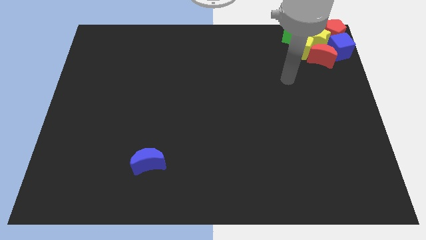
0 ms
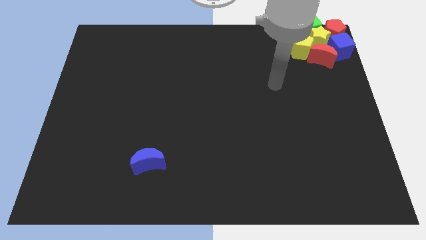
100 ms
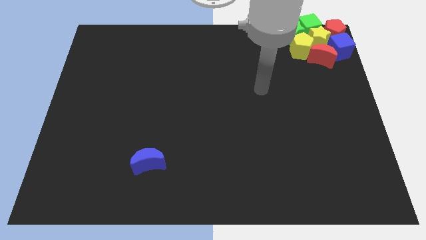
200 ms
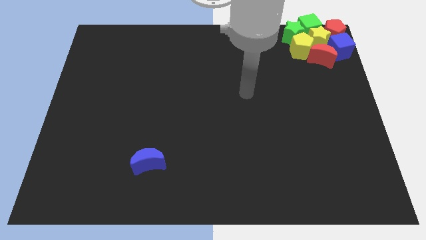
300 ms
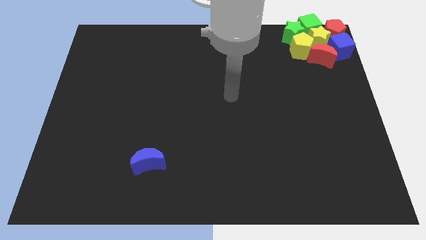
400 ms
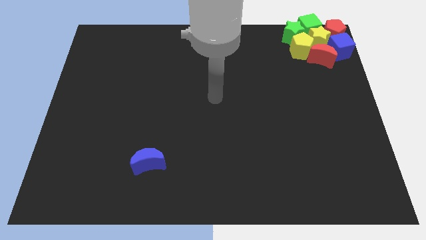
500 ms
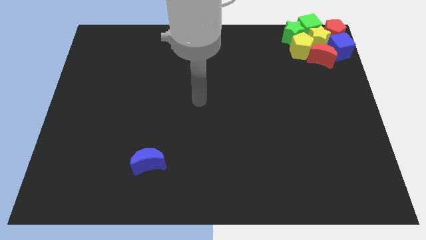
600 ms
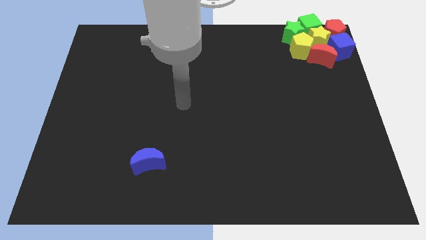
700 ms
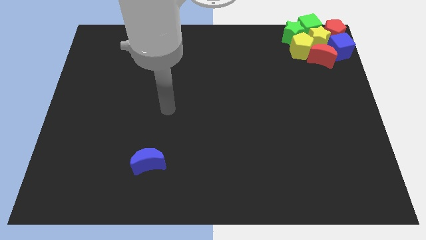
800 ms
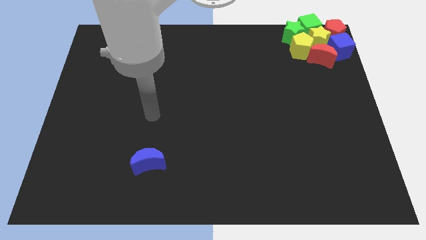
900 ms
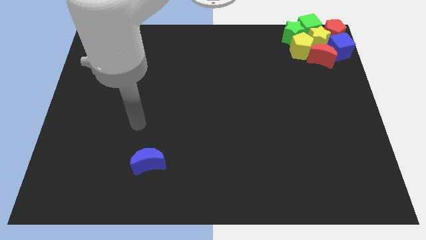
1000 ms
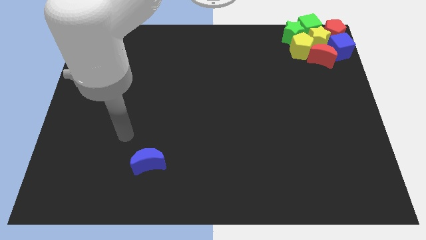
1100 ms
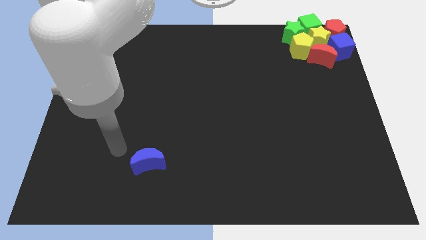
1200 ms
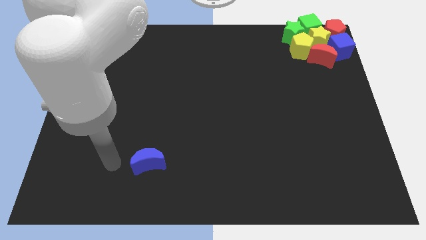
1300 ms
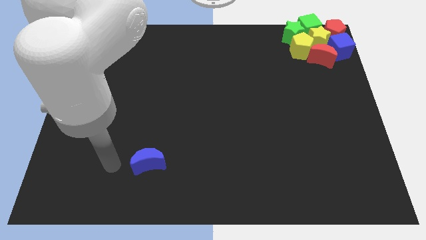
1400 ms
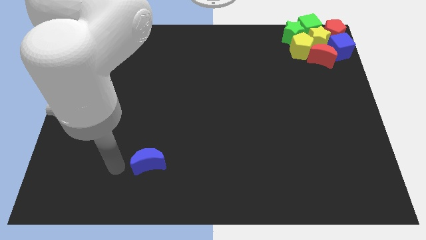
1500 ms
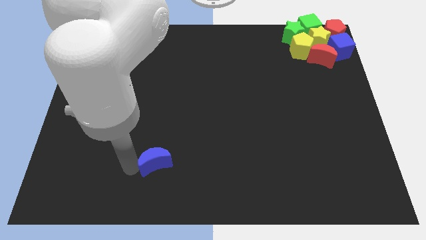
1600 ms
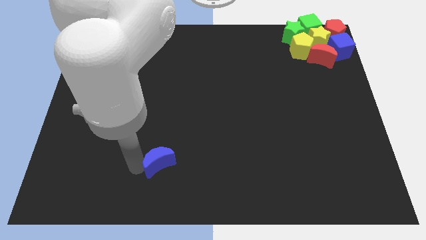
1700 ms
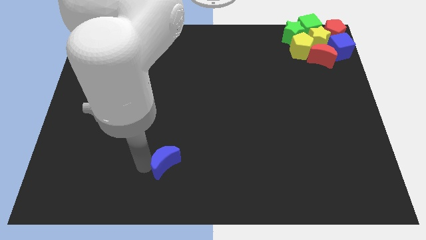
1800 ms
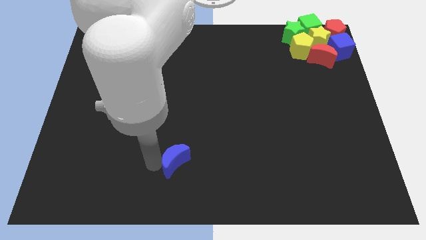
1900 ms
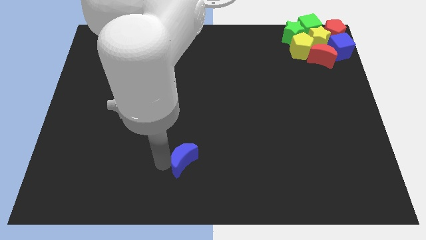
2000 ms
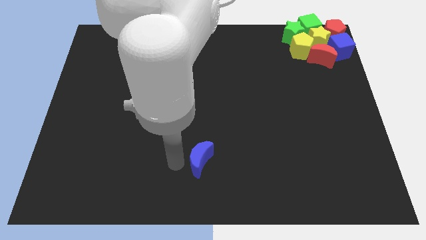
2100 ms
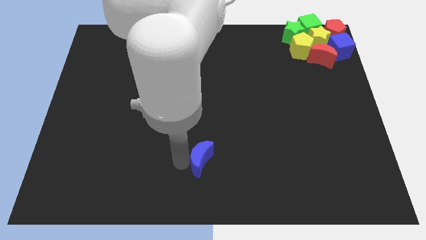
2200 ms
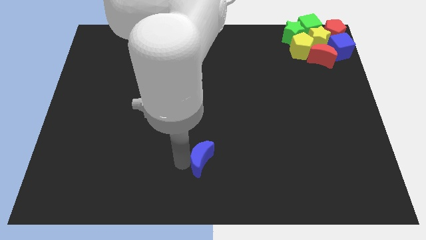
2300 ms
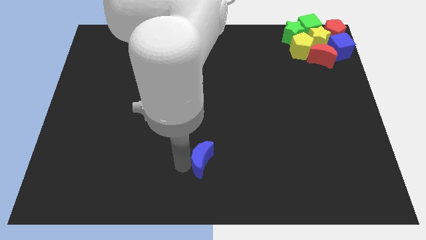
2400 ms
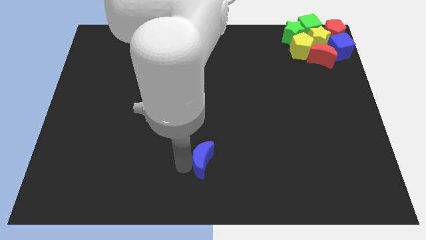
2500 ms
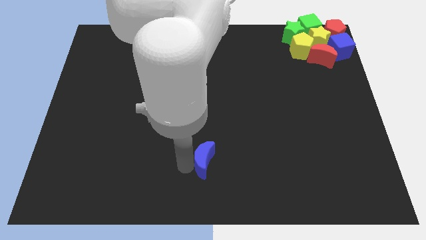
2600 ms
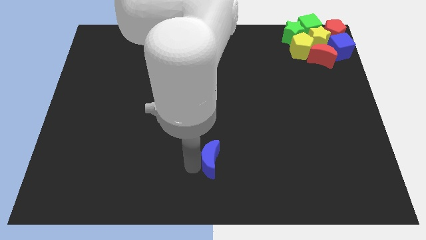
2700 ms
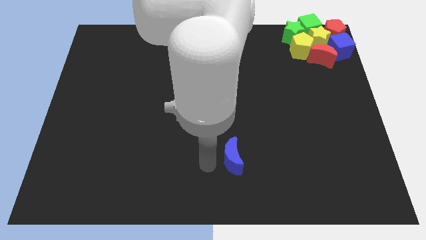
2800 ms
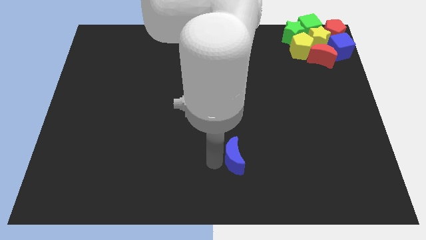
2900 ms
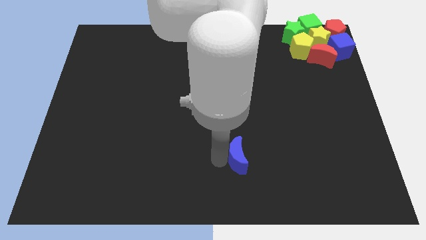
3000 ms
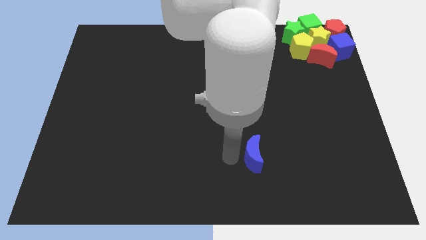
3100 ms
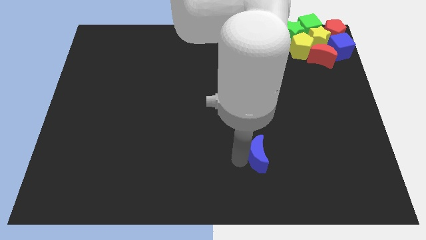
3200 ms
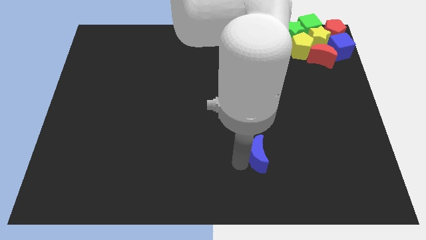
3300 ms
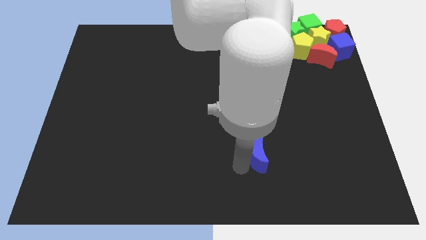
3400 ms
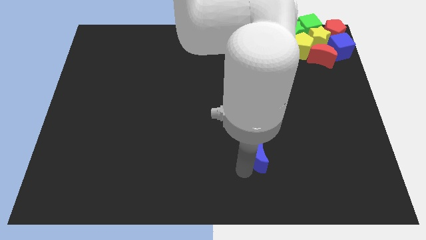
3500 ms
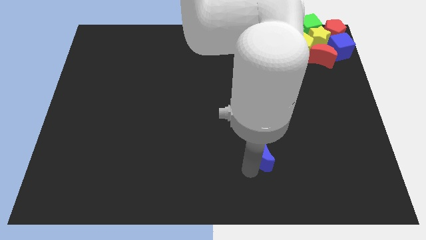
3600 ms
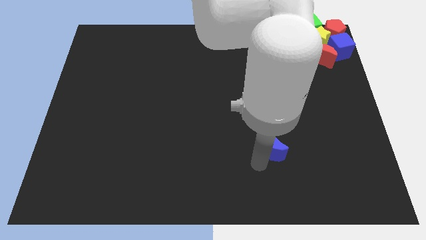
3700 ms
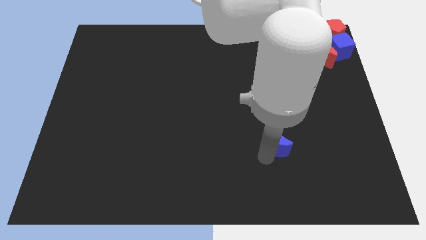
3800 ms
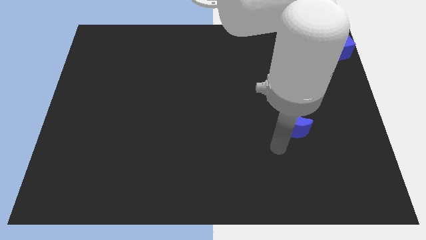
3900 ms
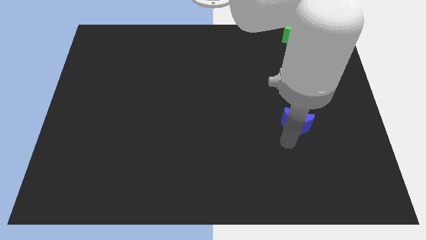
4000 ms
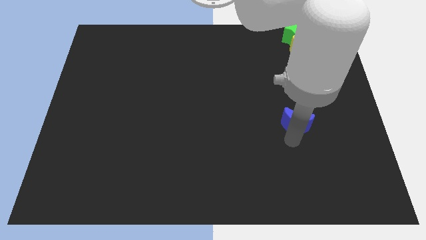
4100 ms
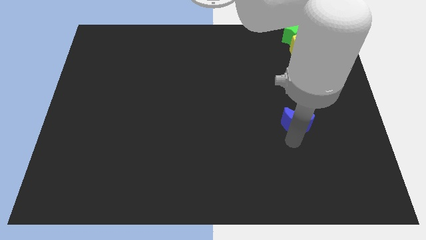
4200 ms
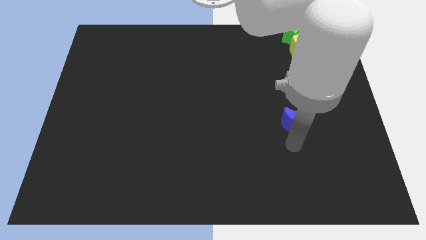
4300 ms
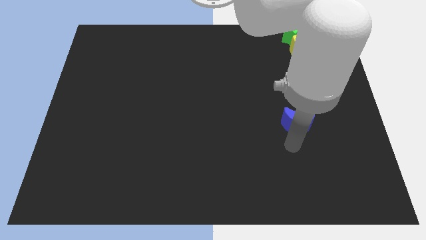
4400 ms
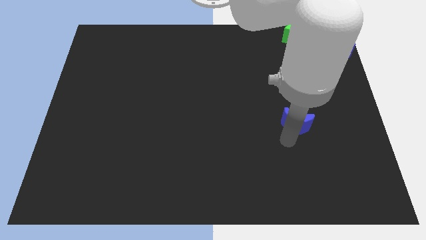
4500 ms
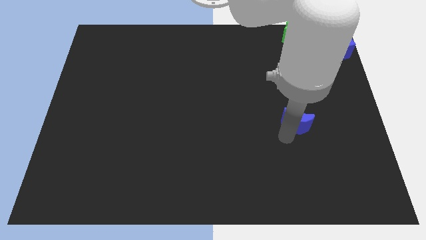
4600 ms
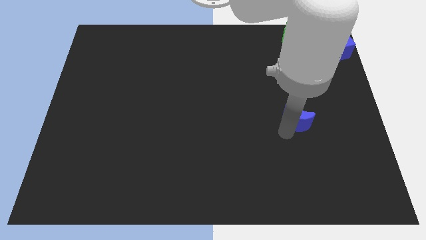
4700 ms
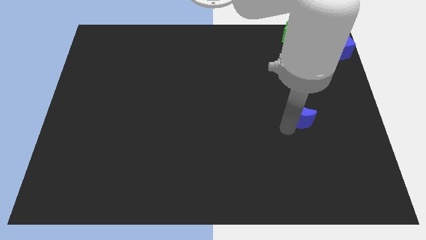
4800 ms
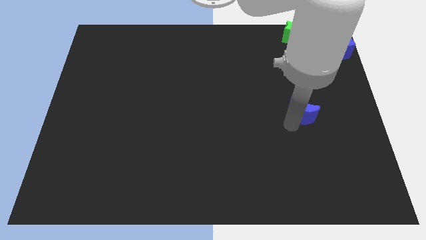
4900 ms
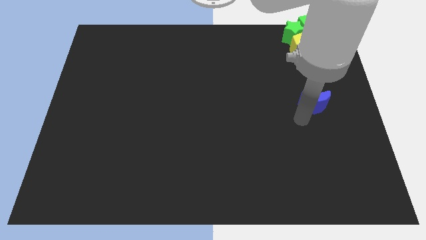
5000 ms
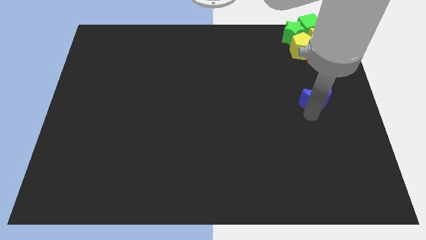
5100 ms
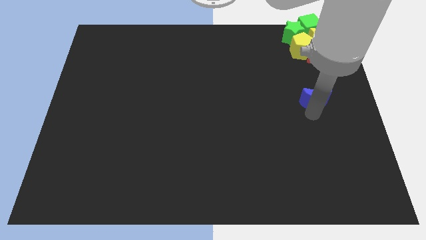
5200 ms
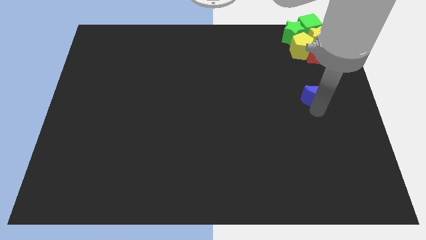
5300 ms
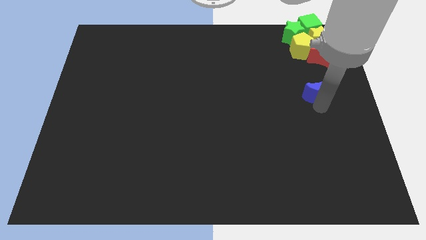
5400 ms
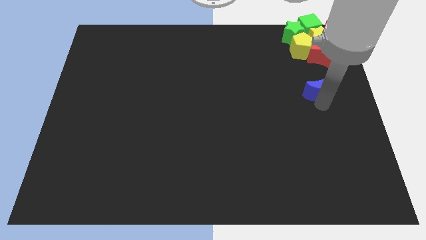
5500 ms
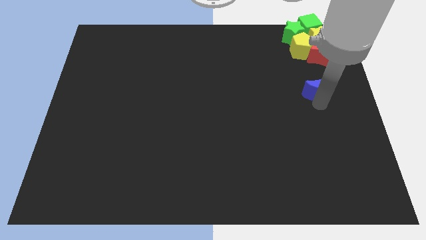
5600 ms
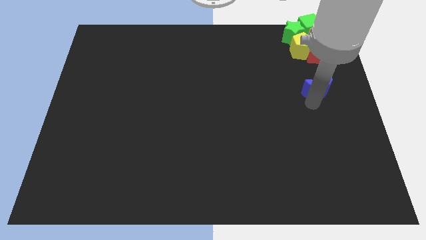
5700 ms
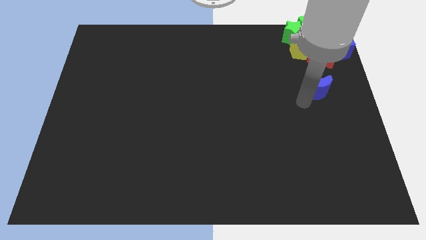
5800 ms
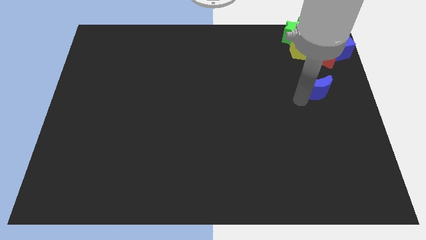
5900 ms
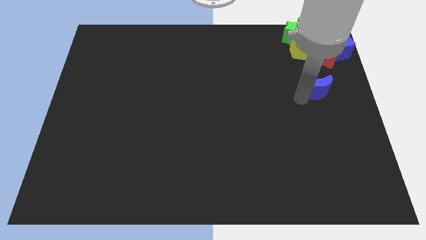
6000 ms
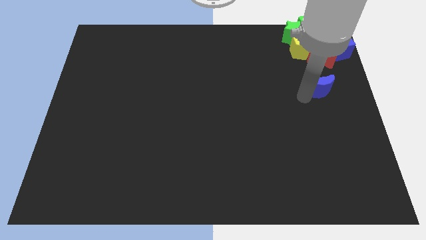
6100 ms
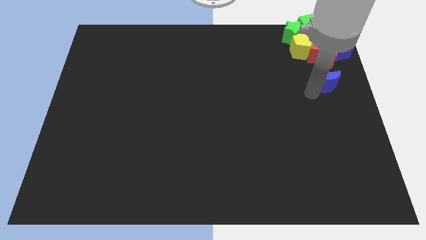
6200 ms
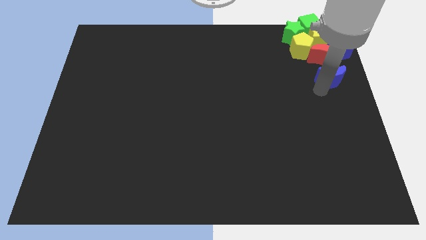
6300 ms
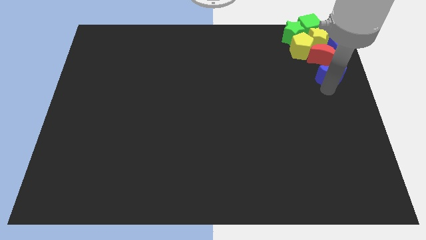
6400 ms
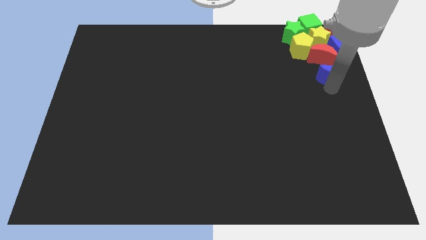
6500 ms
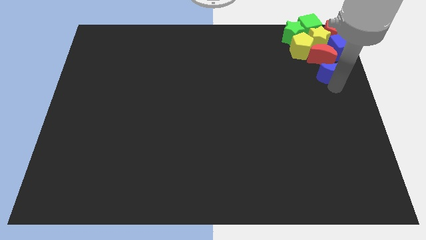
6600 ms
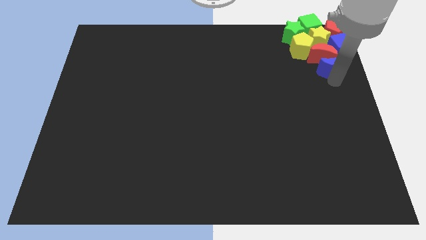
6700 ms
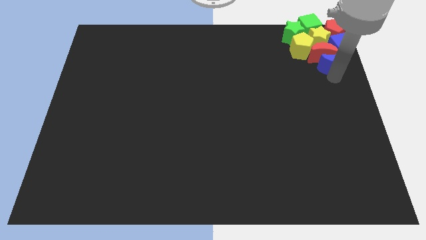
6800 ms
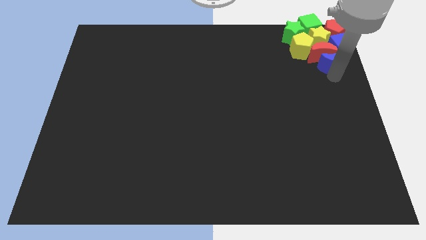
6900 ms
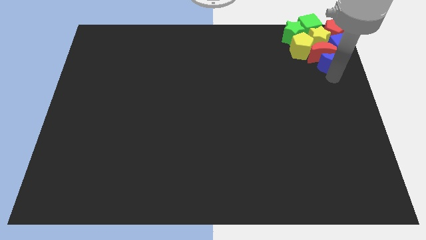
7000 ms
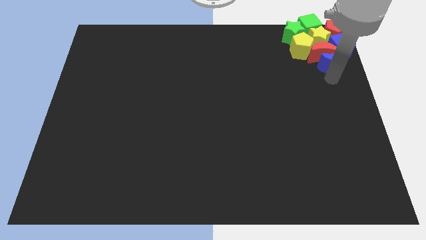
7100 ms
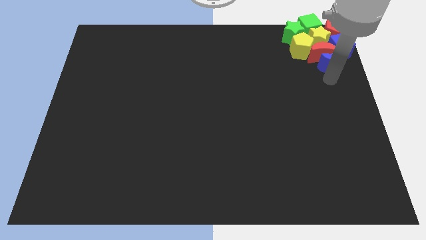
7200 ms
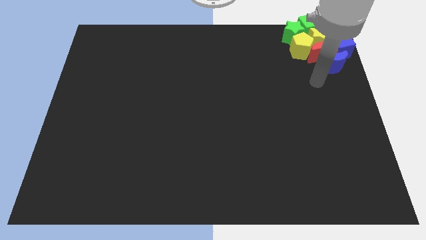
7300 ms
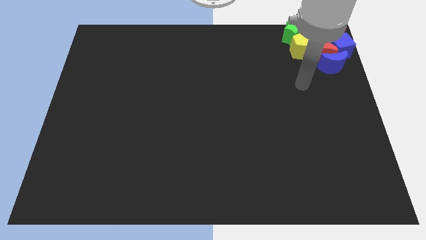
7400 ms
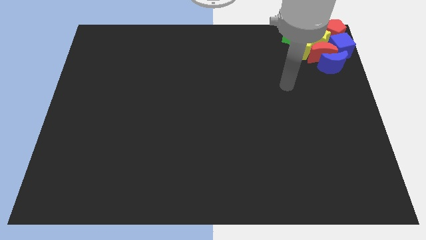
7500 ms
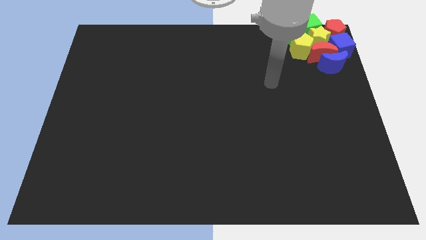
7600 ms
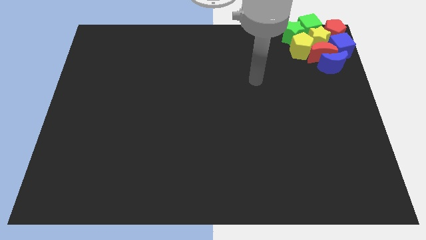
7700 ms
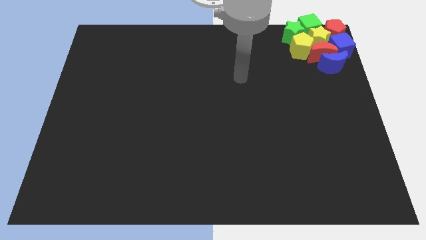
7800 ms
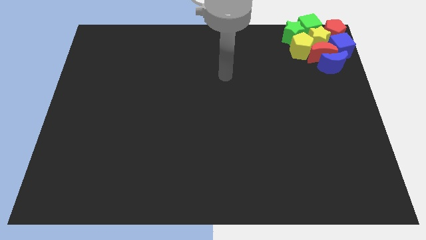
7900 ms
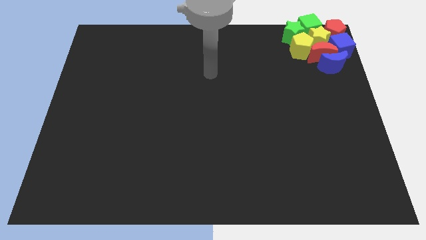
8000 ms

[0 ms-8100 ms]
move the blue moon into the red moon

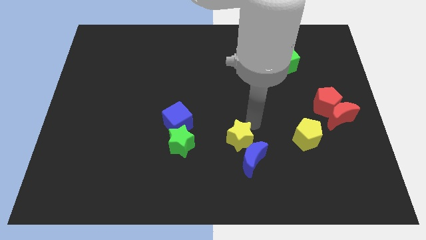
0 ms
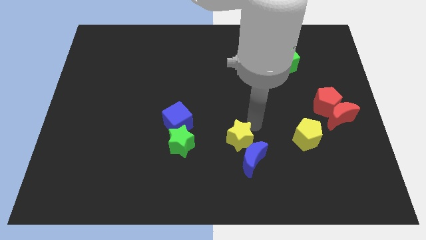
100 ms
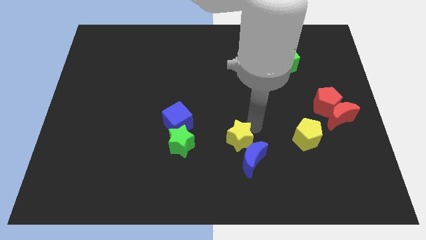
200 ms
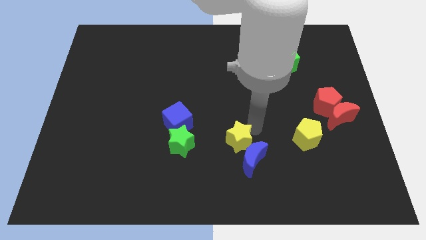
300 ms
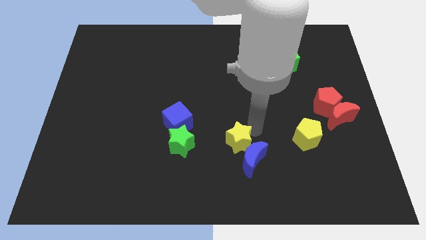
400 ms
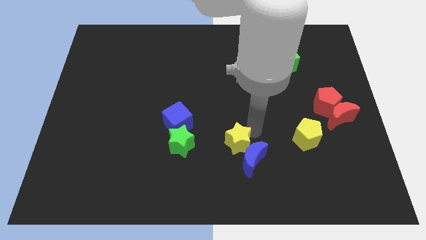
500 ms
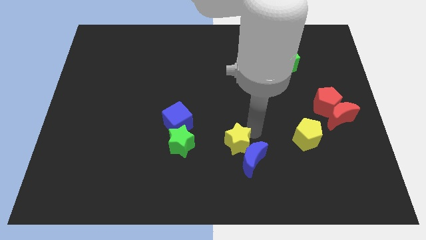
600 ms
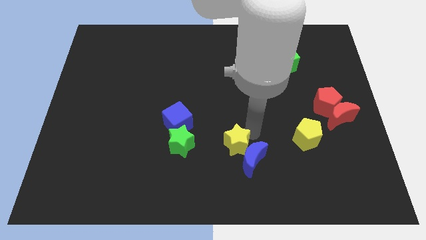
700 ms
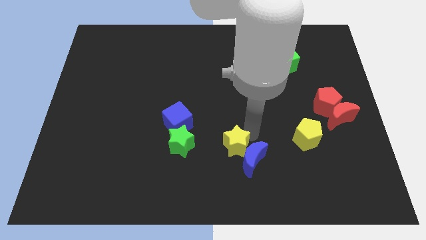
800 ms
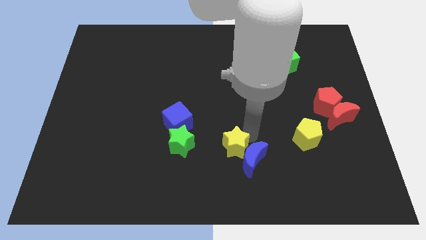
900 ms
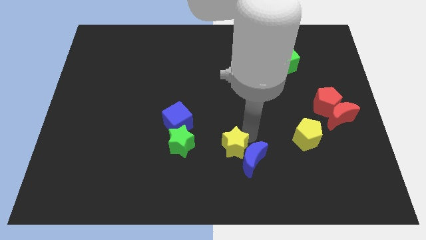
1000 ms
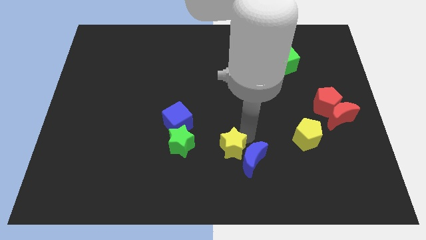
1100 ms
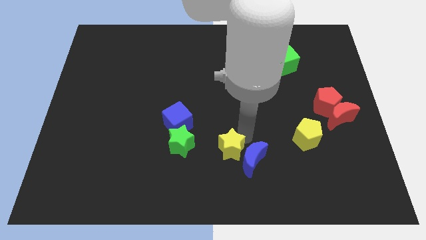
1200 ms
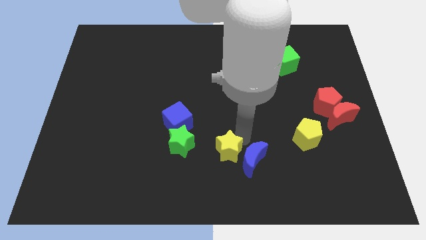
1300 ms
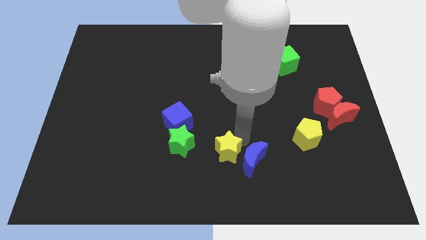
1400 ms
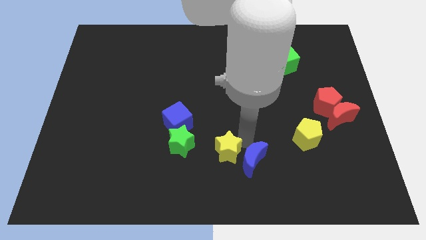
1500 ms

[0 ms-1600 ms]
move yellow star in between green star and blue moon
